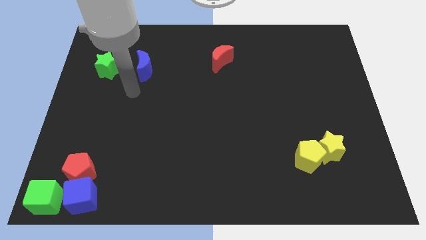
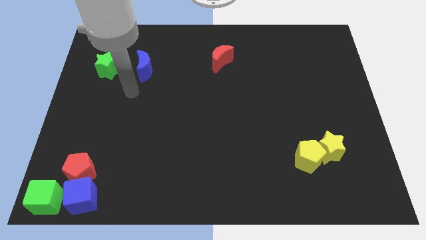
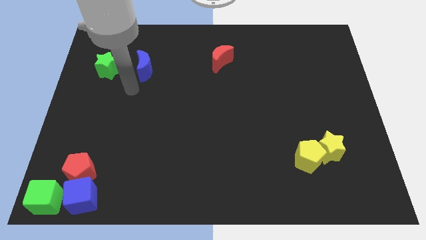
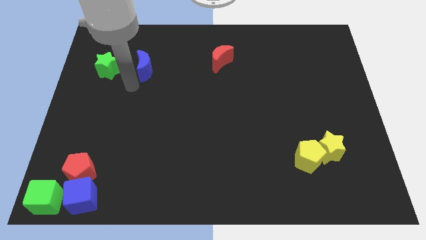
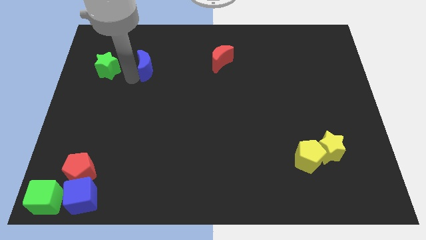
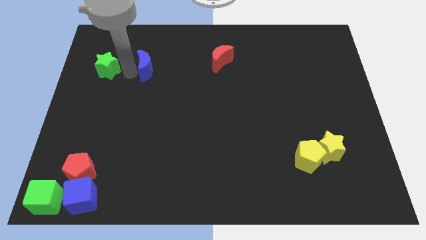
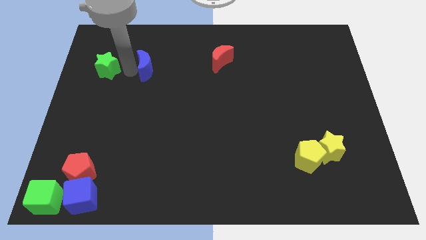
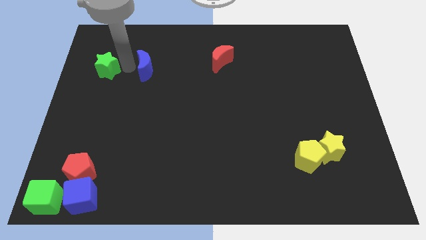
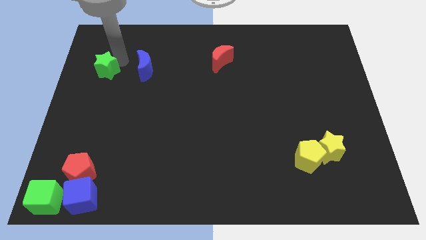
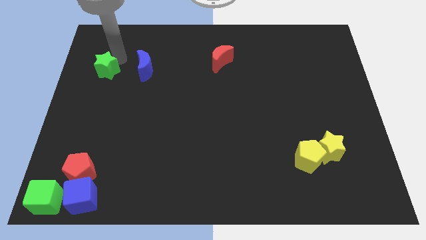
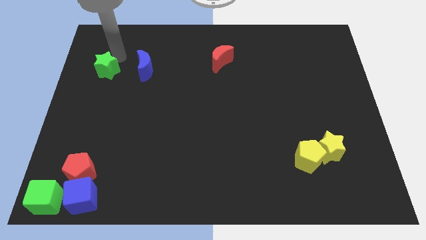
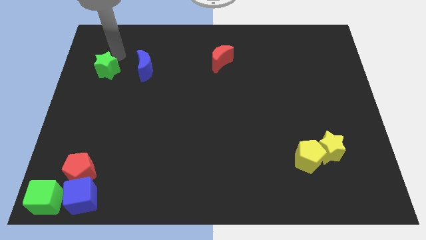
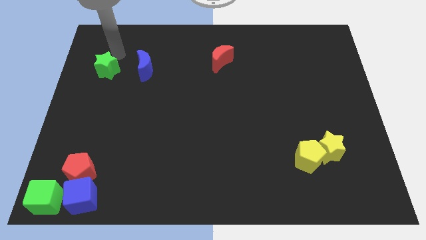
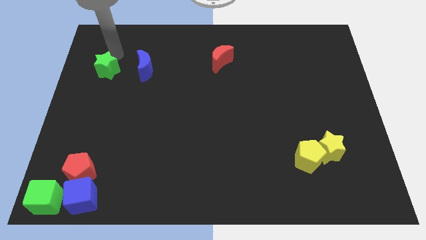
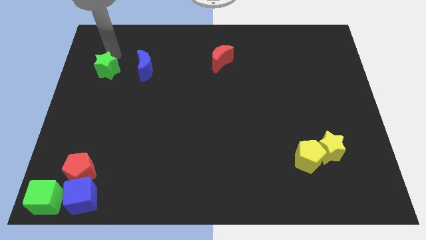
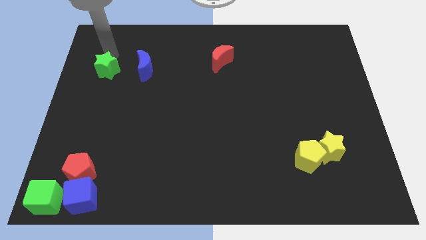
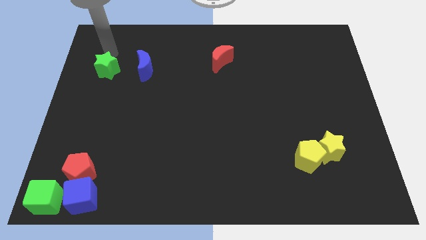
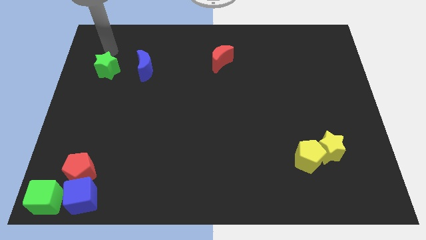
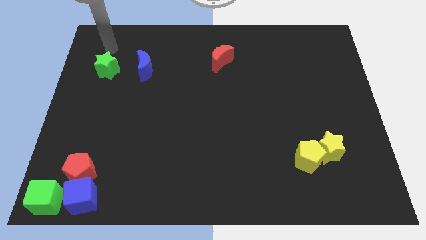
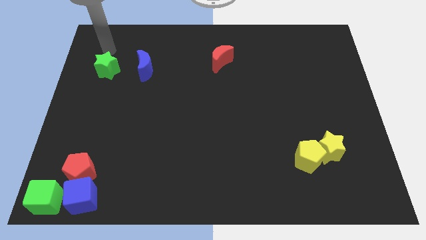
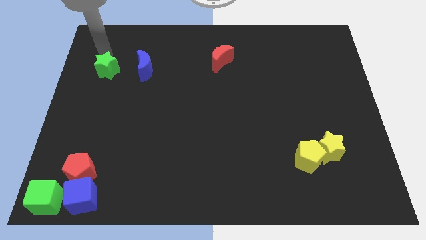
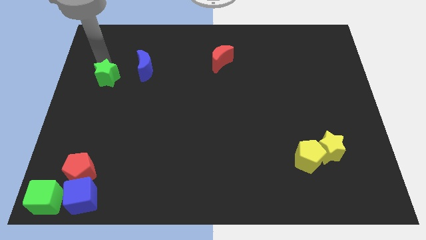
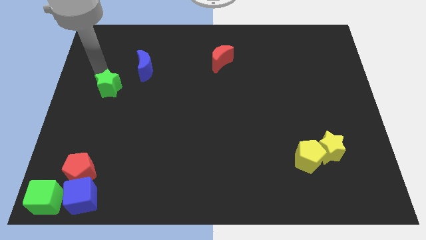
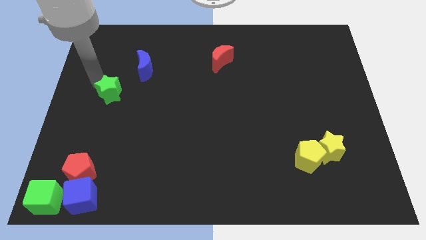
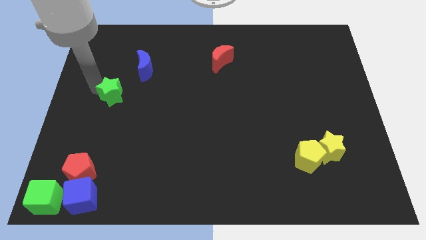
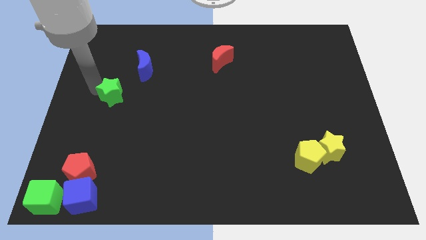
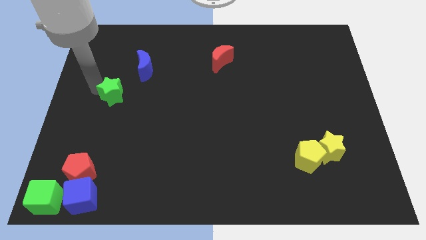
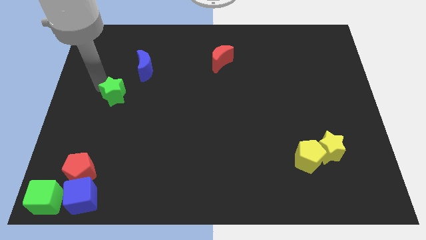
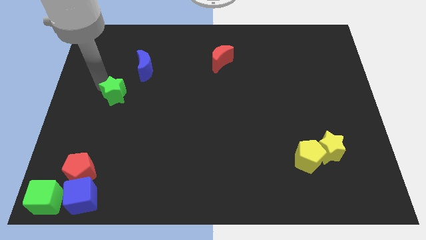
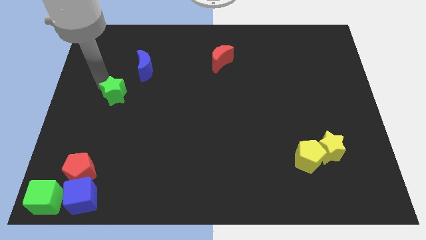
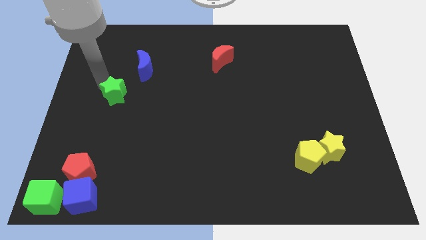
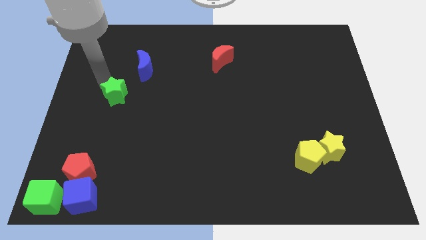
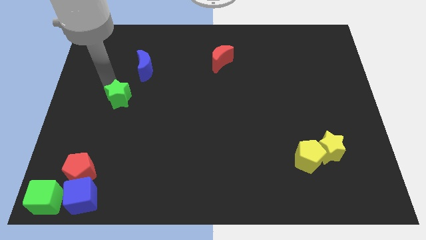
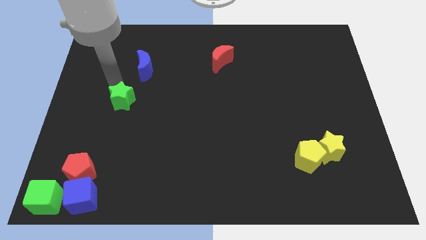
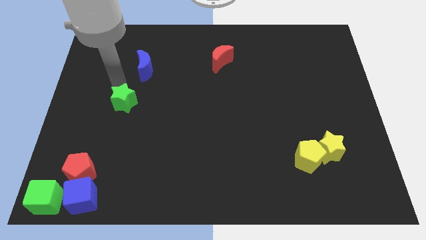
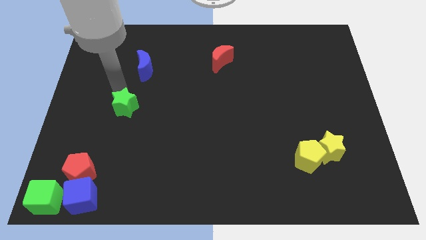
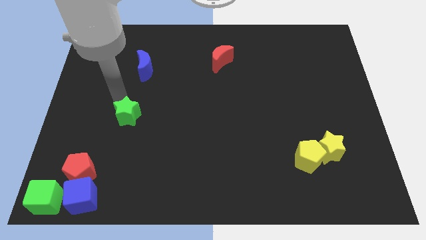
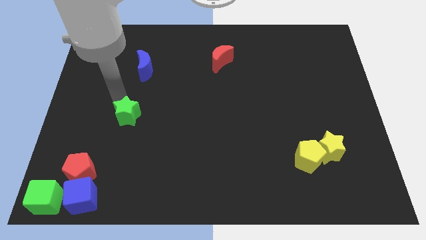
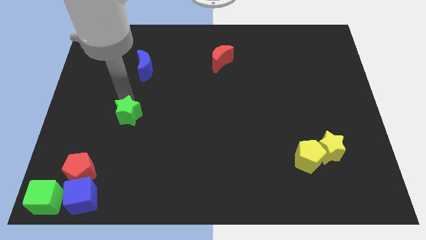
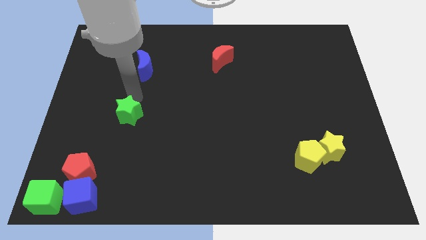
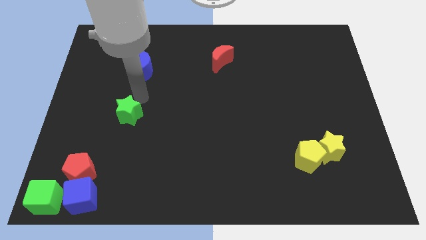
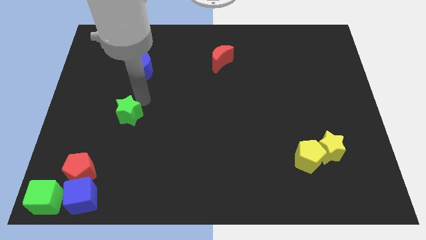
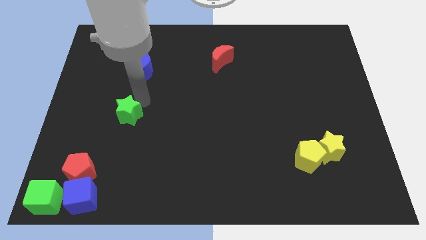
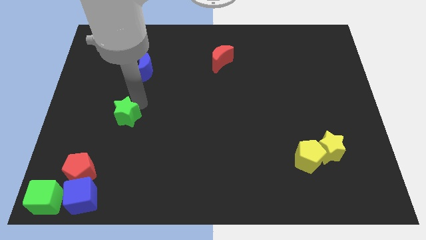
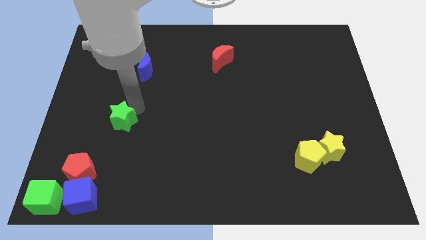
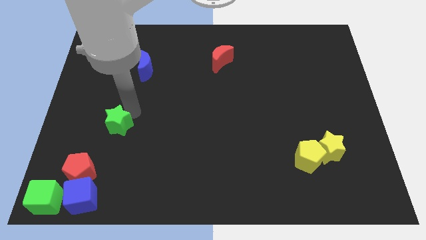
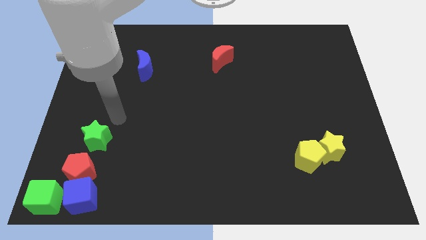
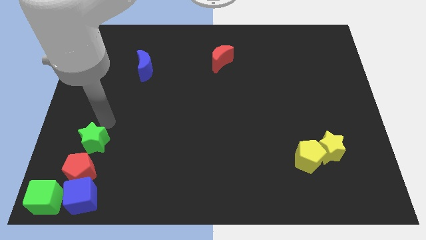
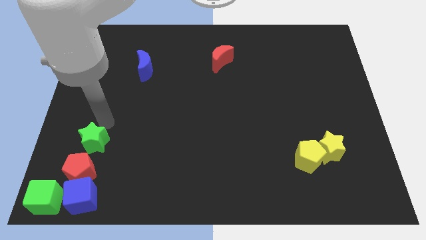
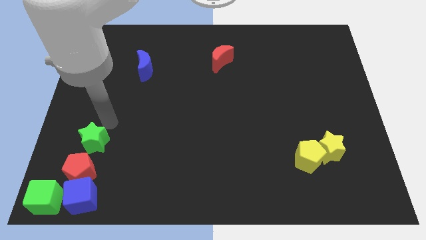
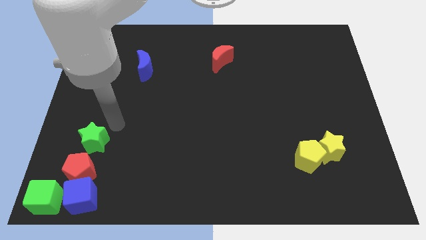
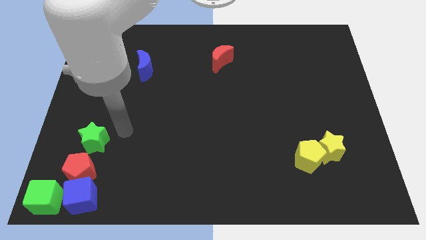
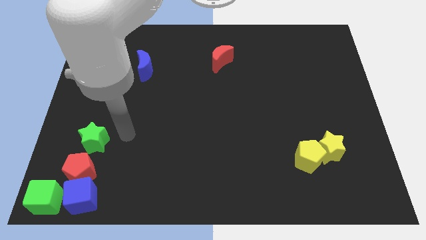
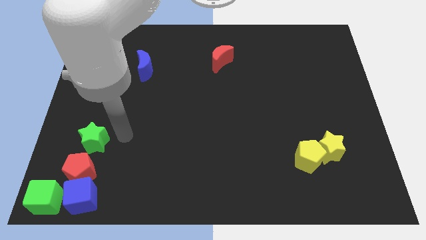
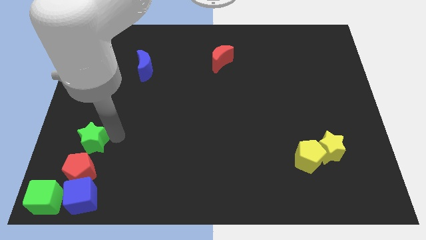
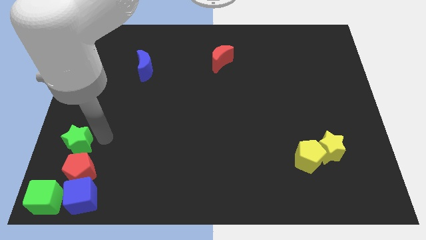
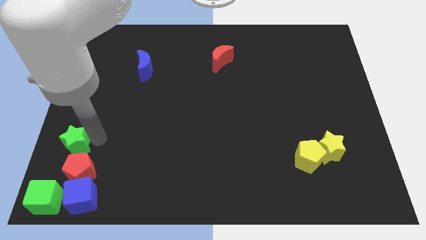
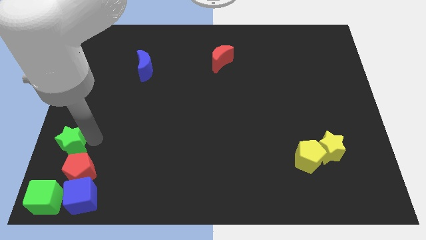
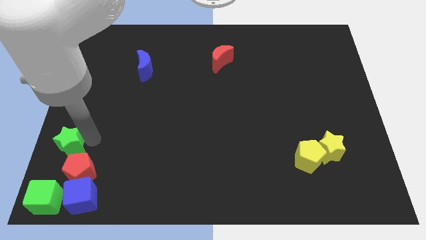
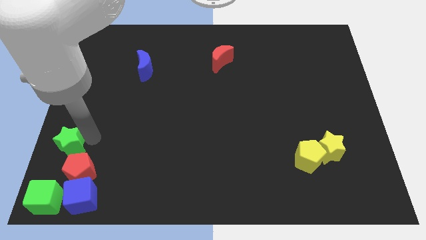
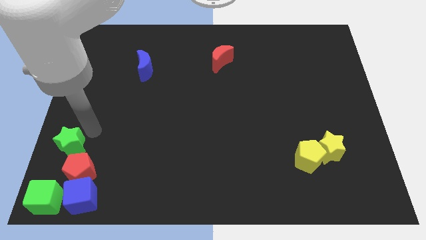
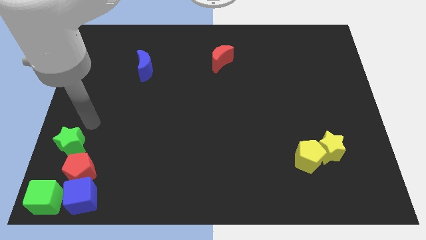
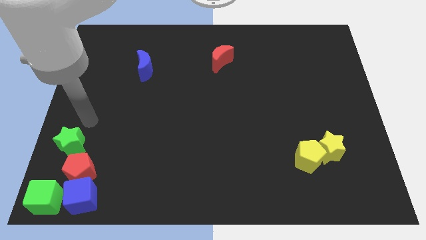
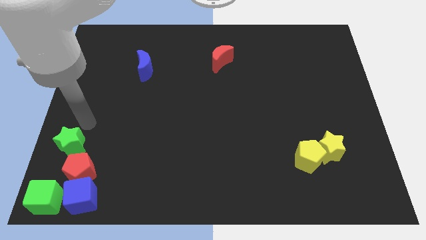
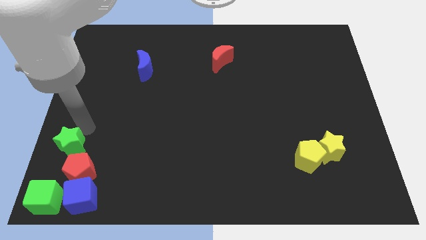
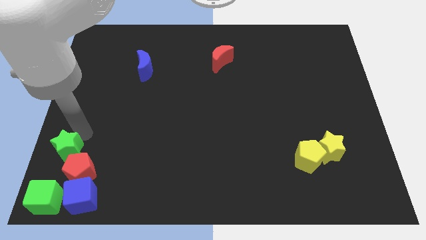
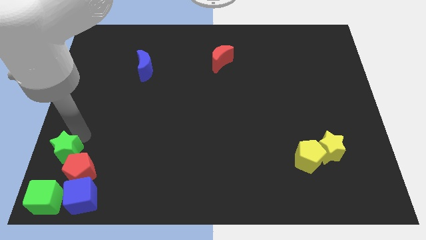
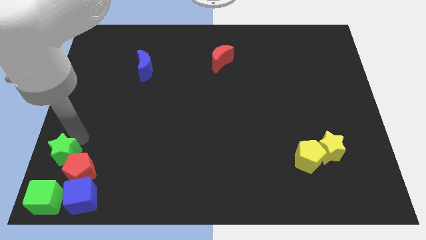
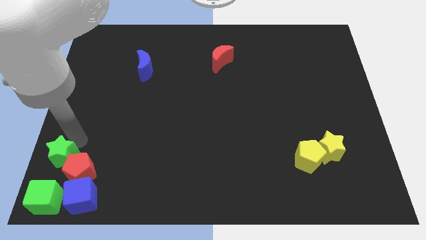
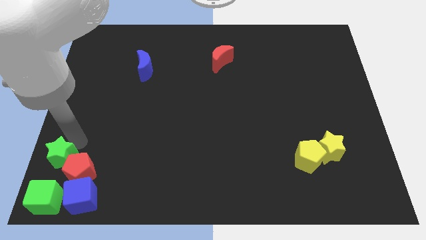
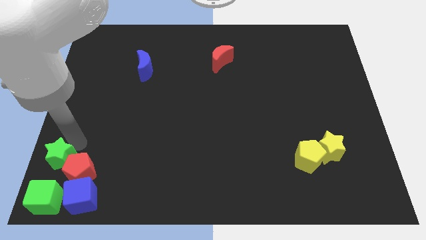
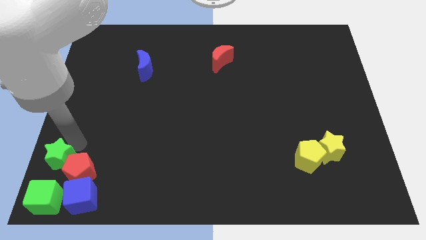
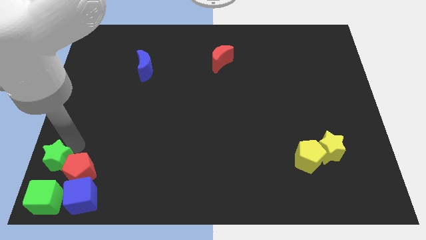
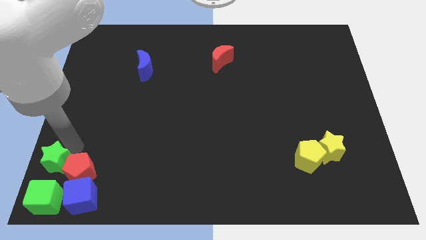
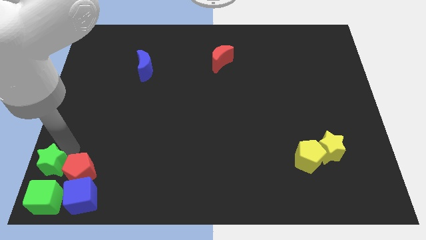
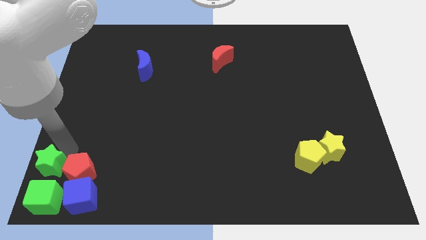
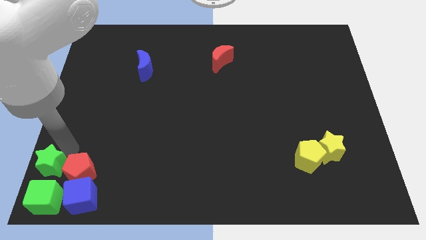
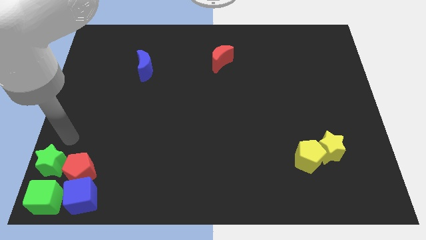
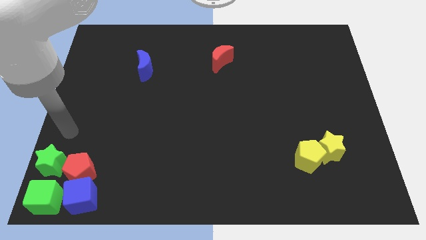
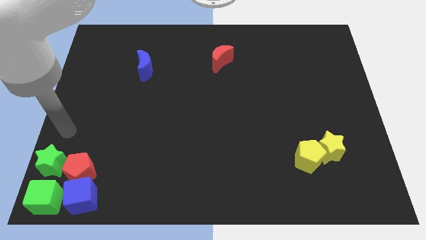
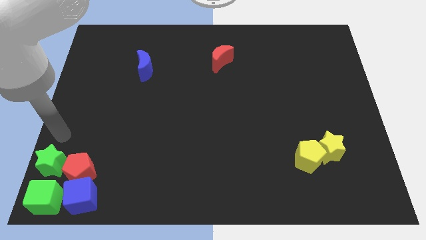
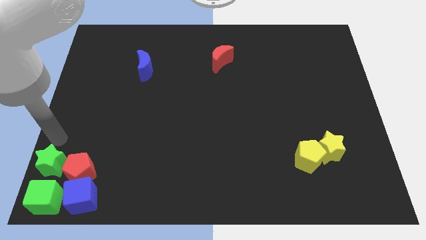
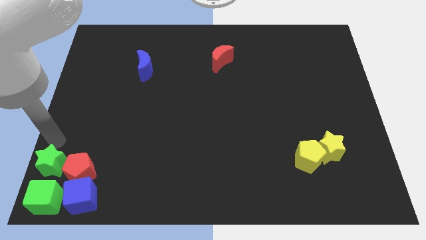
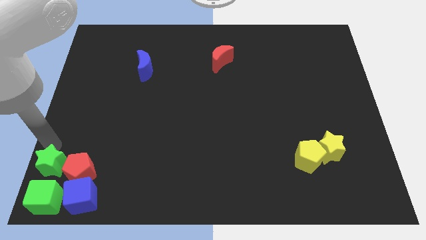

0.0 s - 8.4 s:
place the green star above the green cube

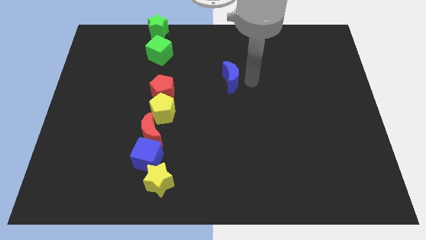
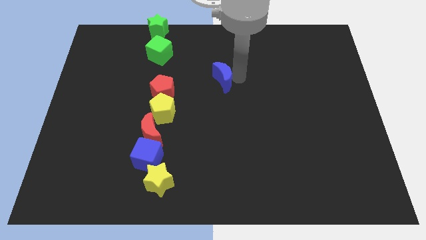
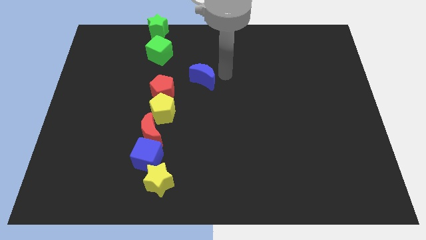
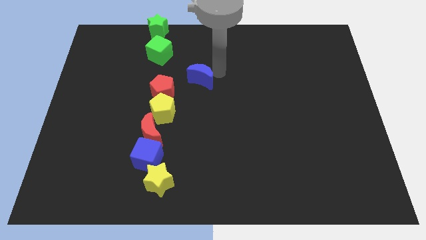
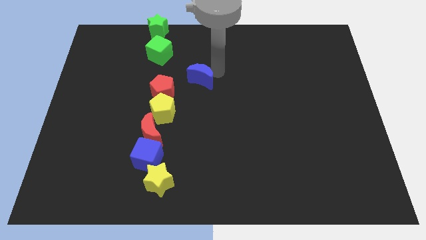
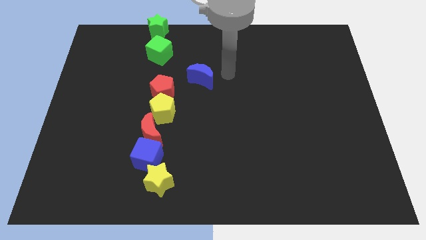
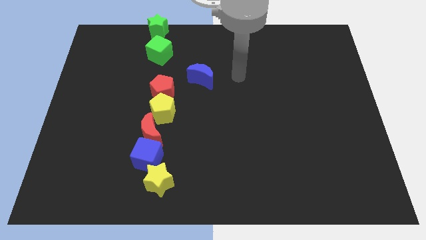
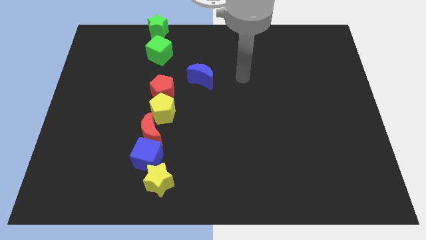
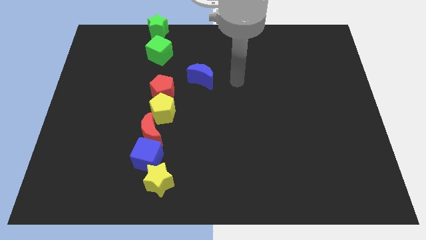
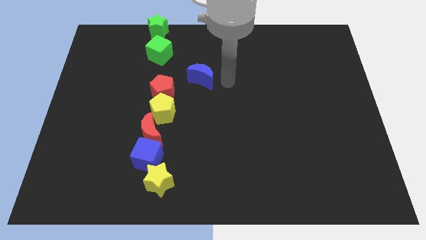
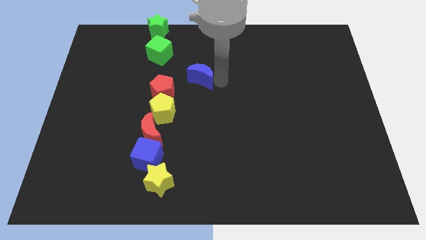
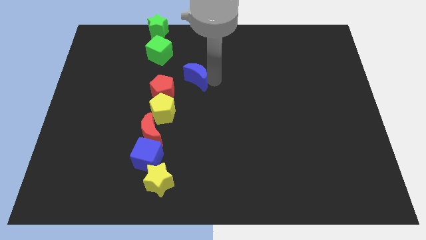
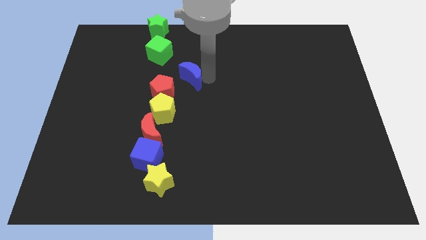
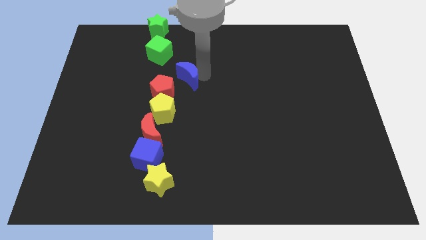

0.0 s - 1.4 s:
drag the blue crescent diagonally top right to the red pentagon
